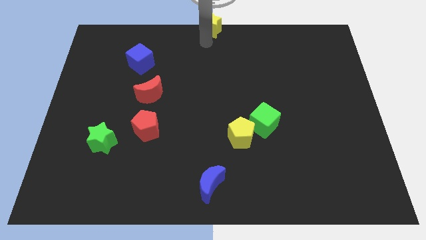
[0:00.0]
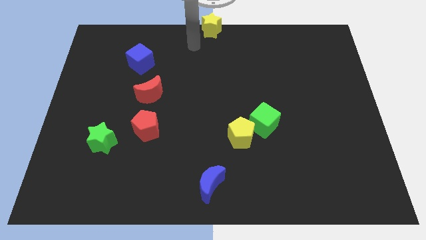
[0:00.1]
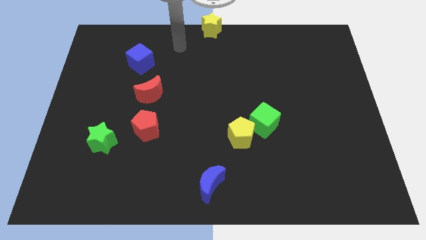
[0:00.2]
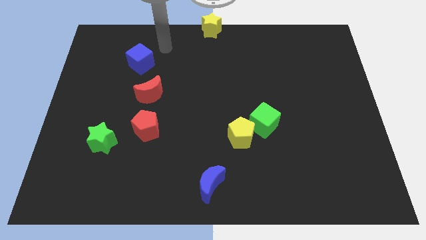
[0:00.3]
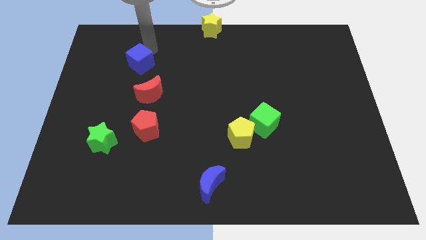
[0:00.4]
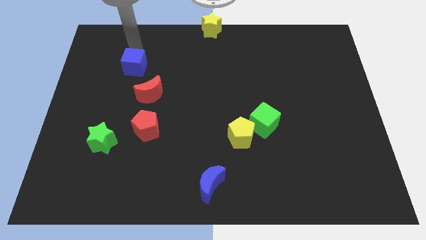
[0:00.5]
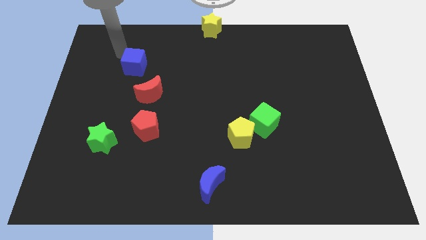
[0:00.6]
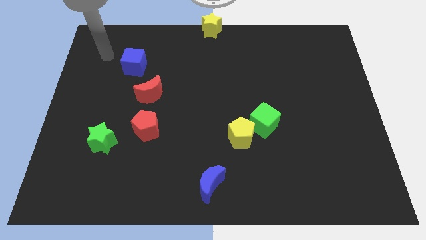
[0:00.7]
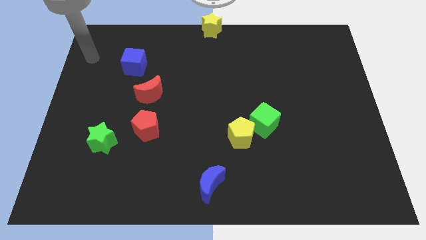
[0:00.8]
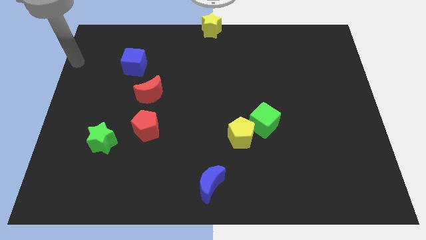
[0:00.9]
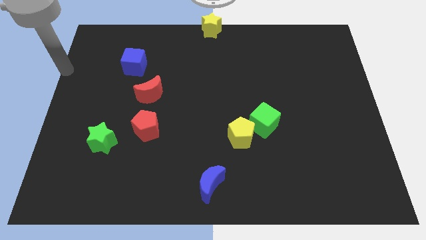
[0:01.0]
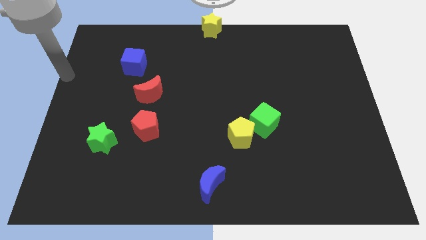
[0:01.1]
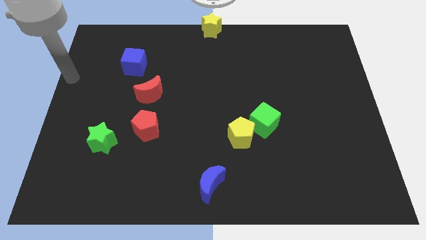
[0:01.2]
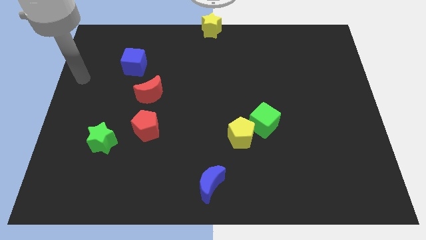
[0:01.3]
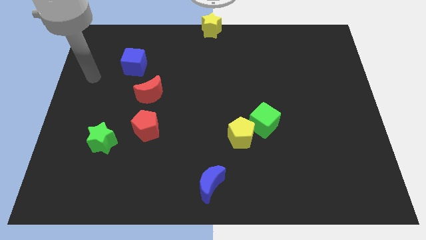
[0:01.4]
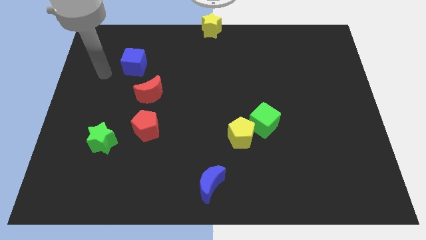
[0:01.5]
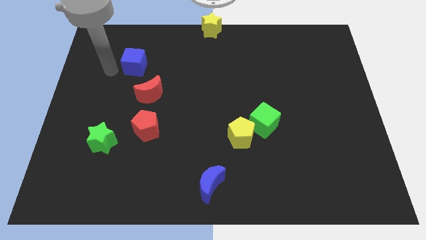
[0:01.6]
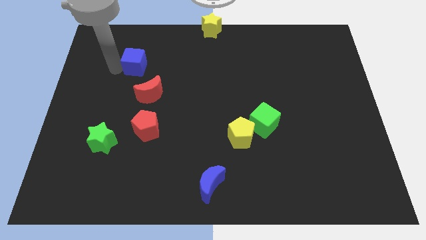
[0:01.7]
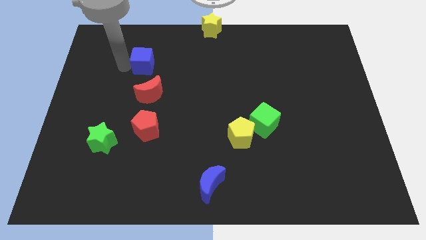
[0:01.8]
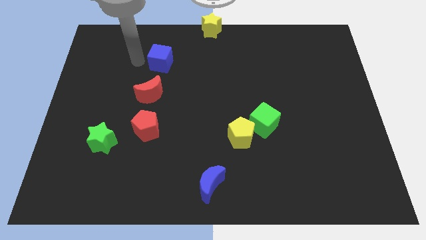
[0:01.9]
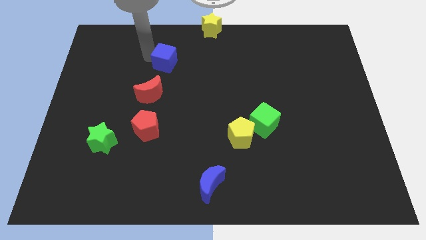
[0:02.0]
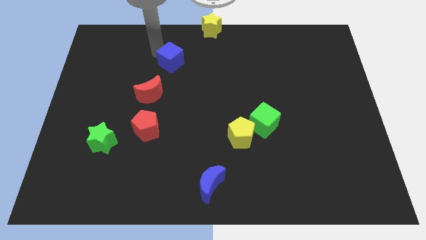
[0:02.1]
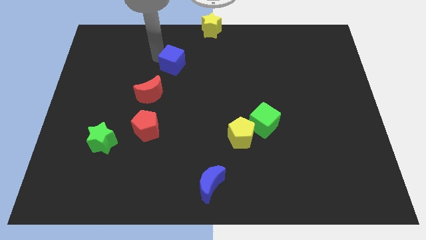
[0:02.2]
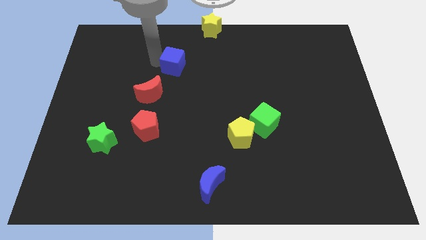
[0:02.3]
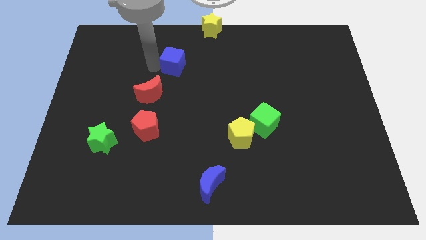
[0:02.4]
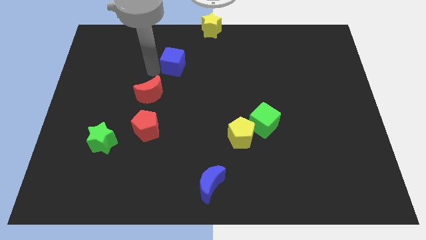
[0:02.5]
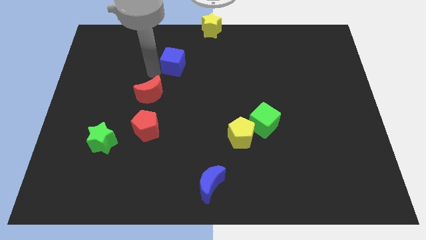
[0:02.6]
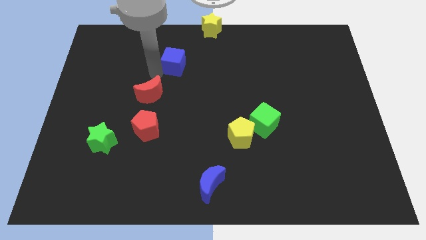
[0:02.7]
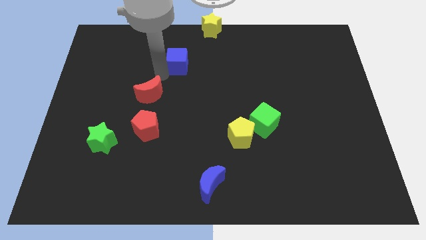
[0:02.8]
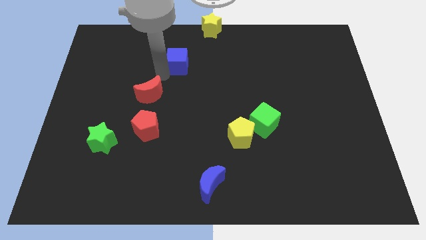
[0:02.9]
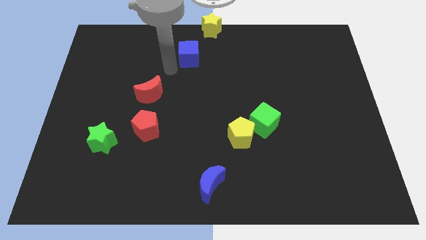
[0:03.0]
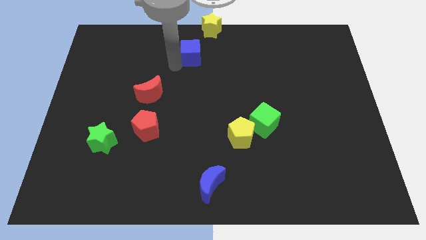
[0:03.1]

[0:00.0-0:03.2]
place the blue cube diagonal to the red moon

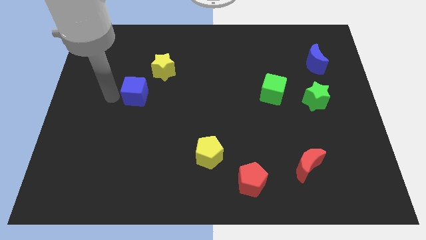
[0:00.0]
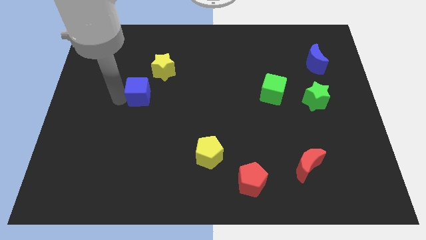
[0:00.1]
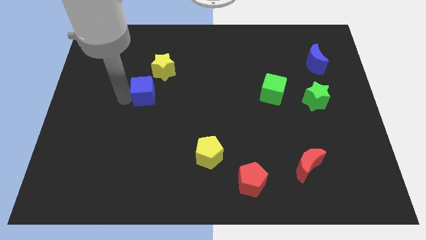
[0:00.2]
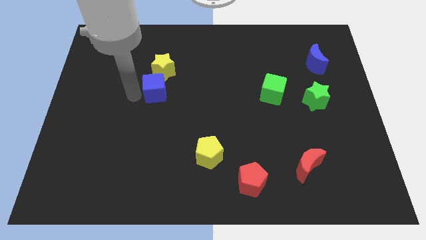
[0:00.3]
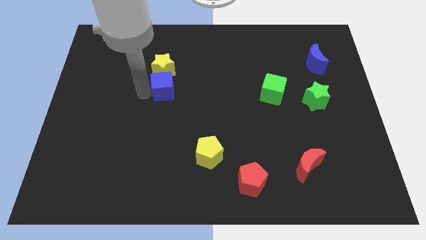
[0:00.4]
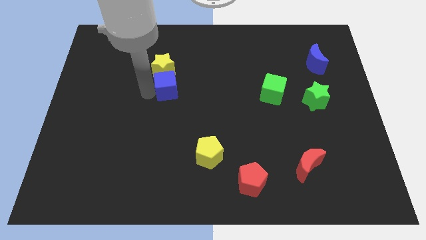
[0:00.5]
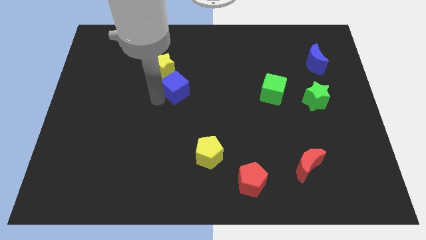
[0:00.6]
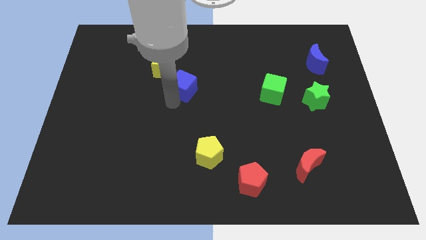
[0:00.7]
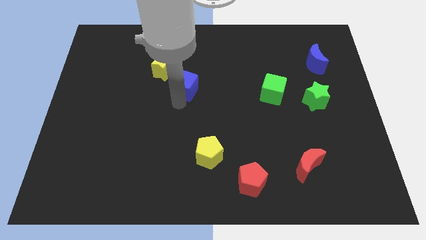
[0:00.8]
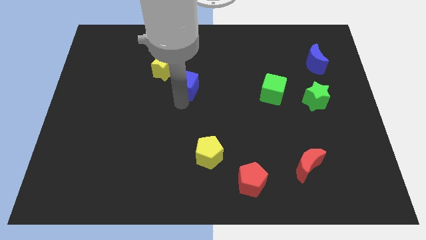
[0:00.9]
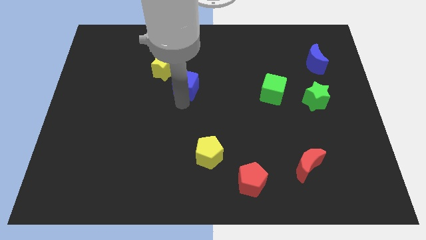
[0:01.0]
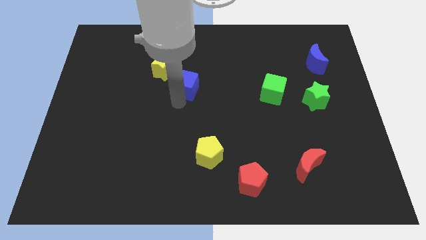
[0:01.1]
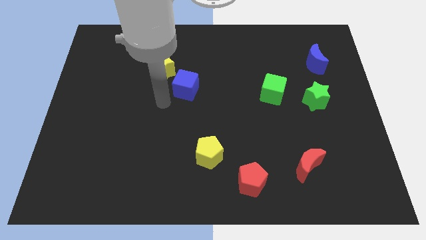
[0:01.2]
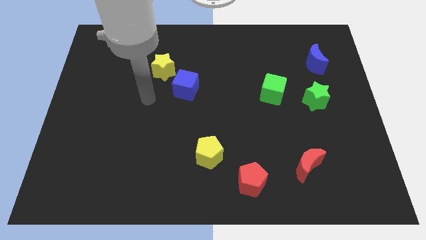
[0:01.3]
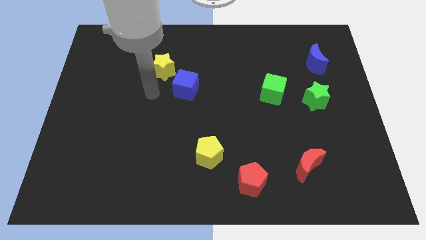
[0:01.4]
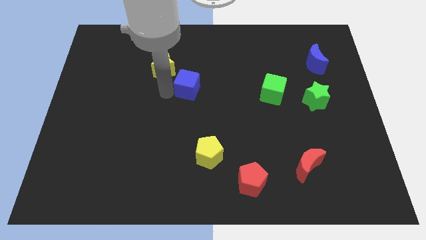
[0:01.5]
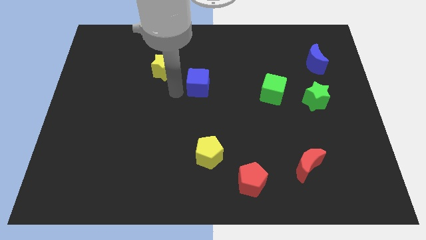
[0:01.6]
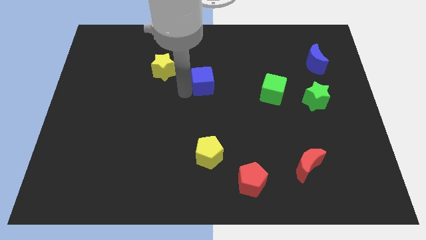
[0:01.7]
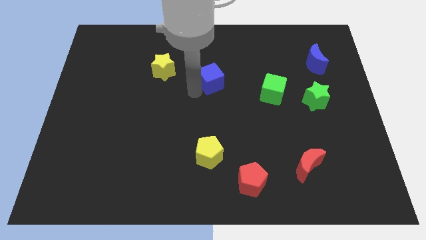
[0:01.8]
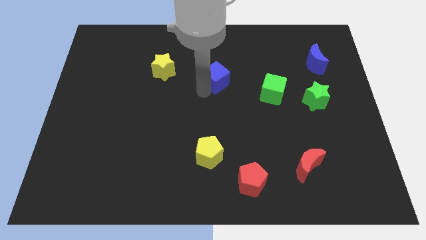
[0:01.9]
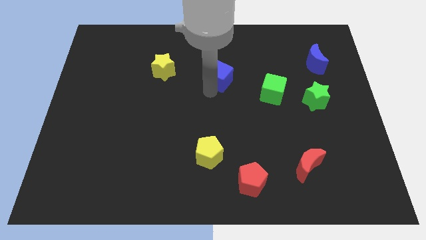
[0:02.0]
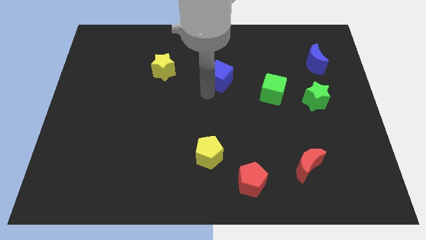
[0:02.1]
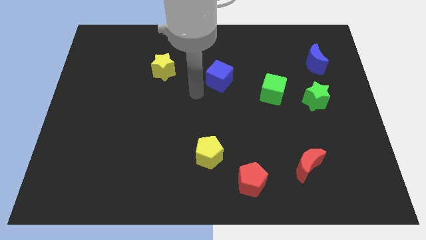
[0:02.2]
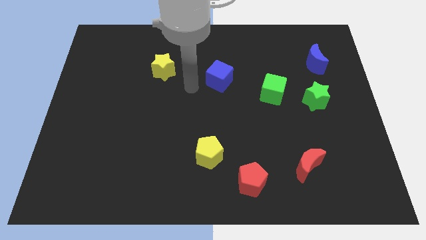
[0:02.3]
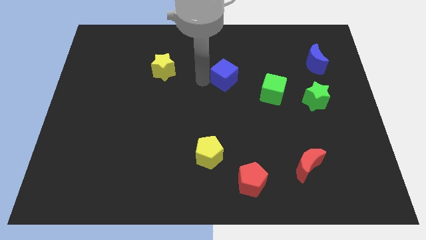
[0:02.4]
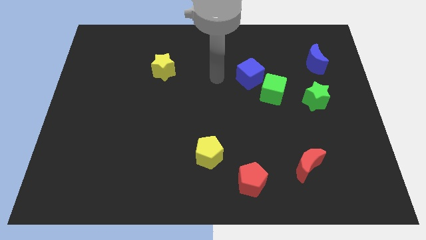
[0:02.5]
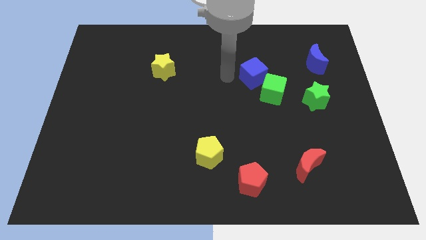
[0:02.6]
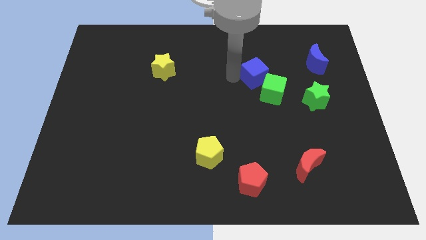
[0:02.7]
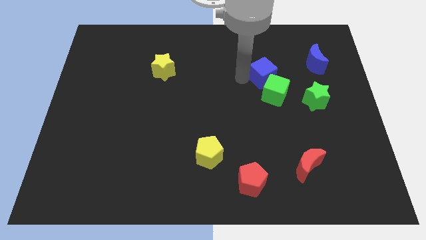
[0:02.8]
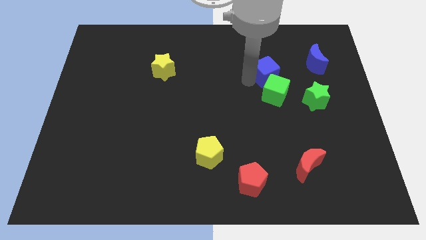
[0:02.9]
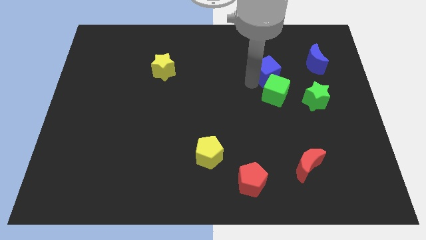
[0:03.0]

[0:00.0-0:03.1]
add blue cube into green cube

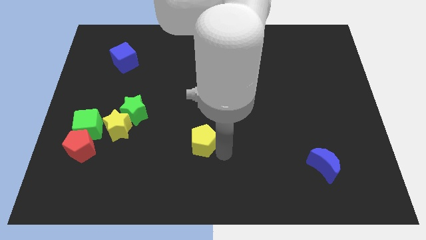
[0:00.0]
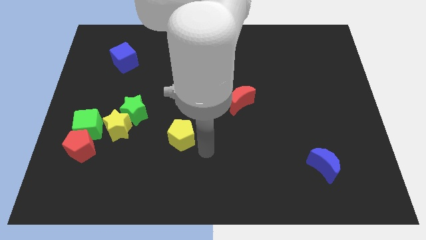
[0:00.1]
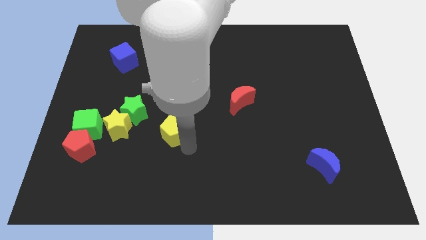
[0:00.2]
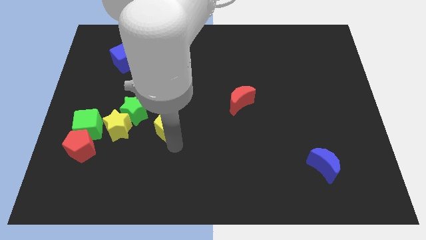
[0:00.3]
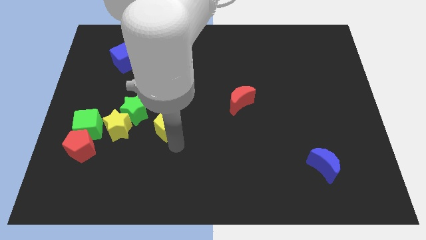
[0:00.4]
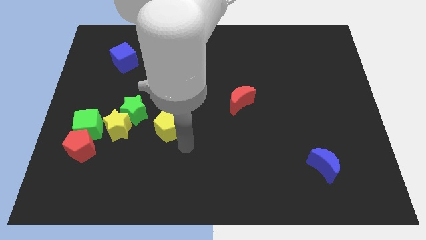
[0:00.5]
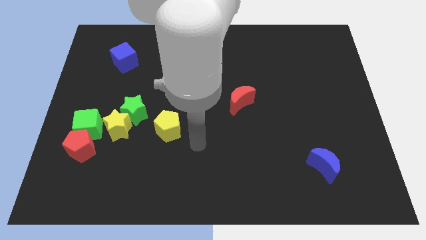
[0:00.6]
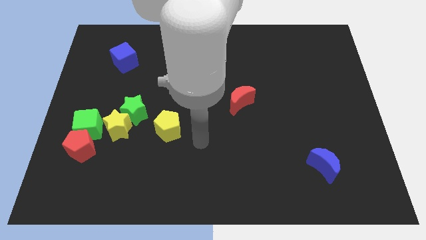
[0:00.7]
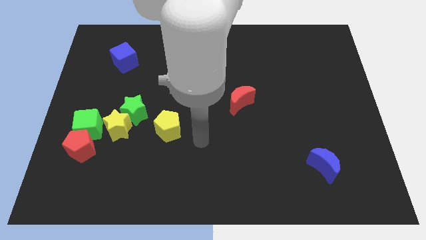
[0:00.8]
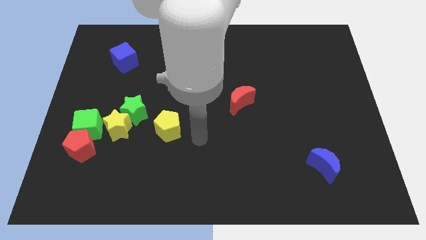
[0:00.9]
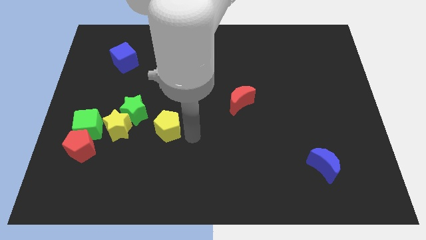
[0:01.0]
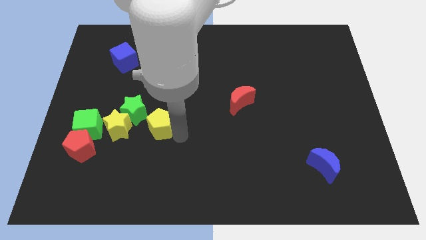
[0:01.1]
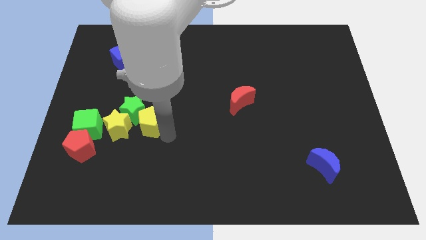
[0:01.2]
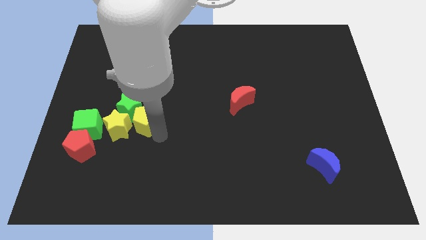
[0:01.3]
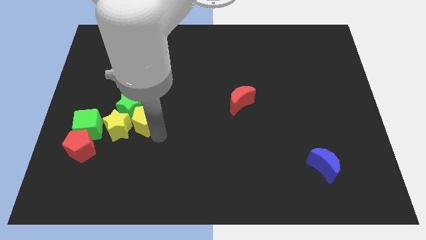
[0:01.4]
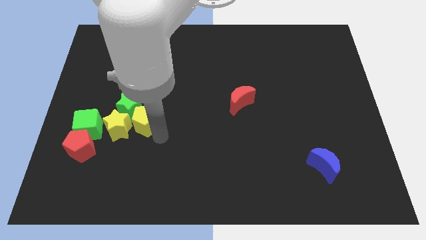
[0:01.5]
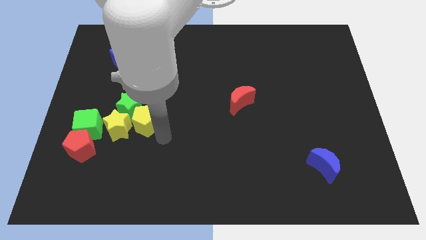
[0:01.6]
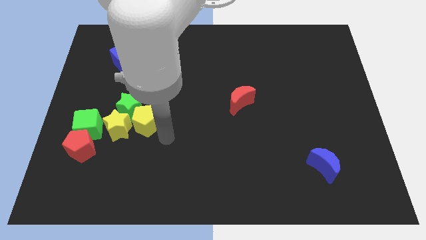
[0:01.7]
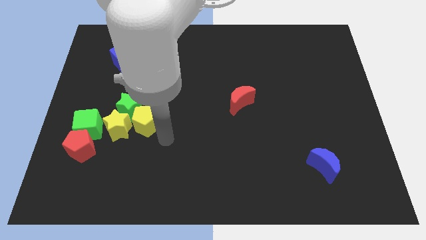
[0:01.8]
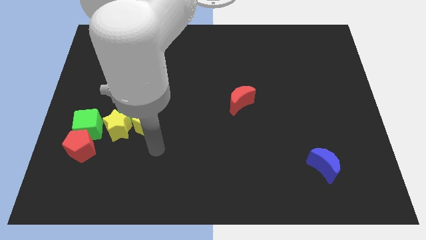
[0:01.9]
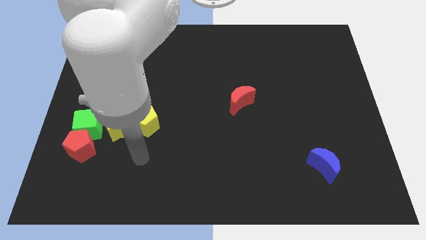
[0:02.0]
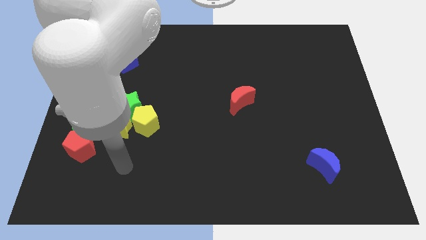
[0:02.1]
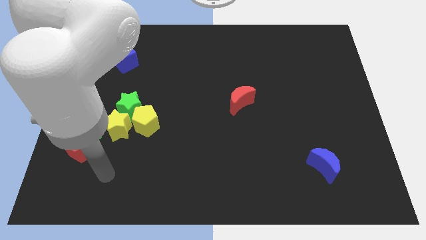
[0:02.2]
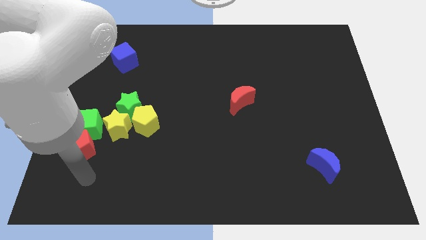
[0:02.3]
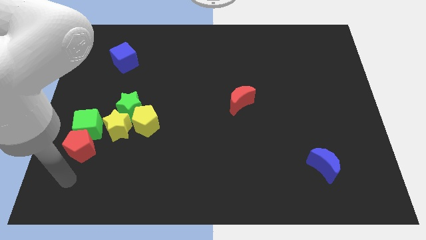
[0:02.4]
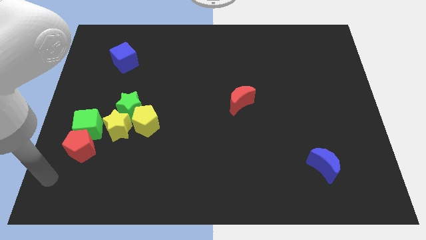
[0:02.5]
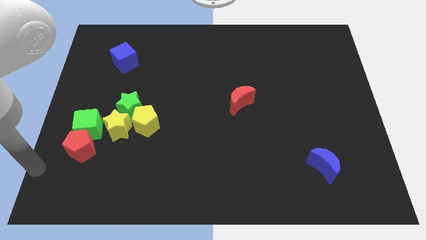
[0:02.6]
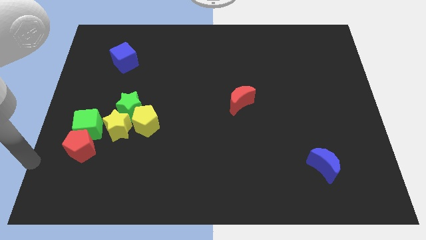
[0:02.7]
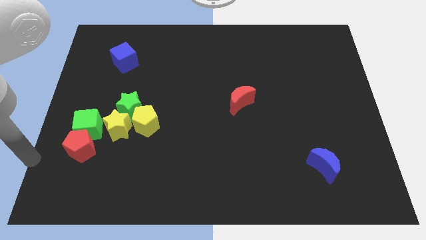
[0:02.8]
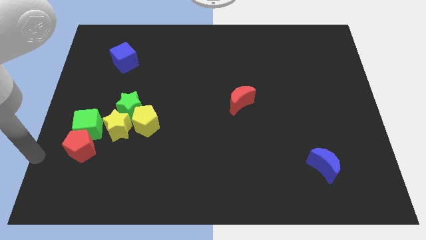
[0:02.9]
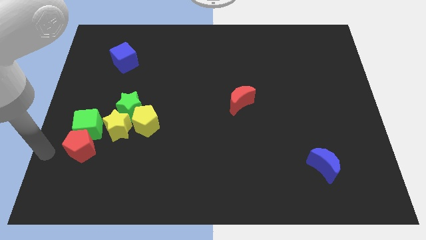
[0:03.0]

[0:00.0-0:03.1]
move the yellow pentagon into the green star
